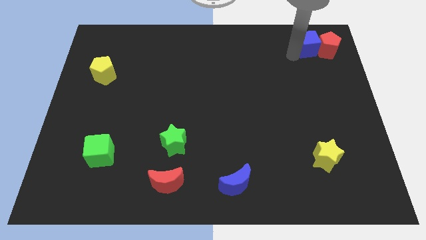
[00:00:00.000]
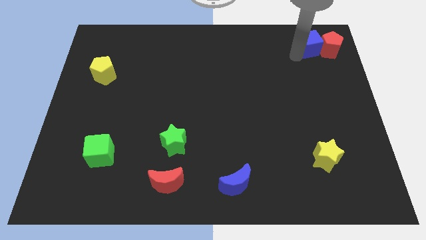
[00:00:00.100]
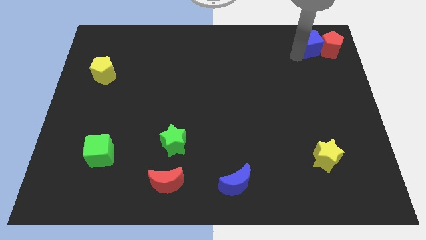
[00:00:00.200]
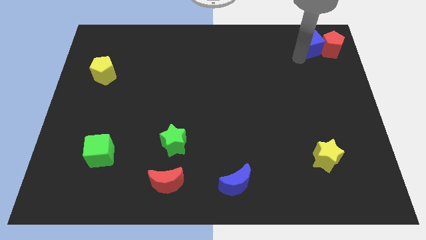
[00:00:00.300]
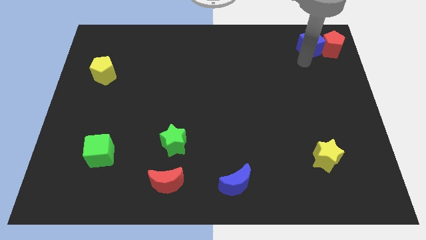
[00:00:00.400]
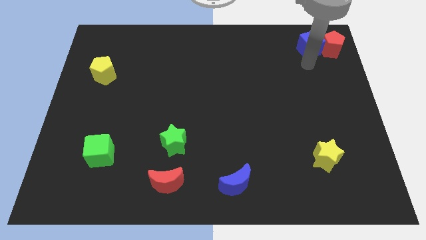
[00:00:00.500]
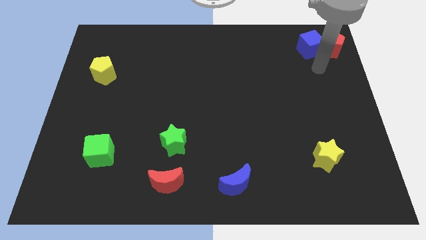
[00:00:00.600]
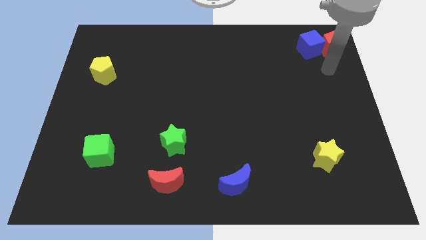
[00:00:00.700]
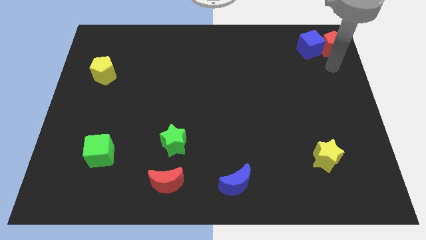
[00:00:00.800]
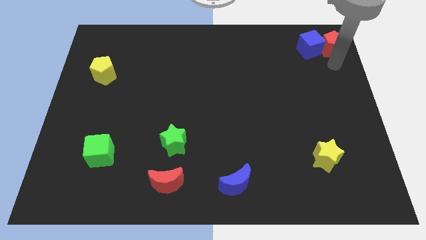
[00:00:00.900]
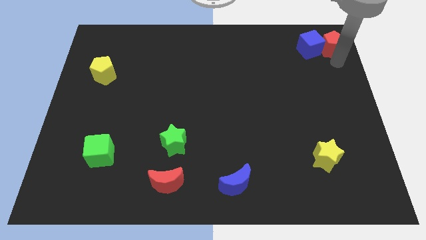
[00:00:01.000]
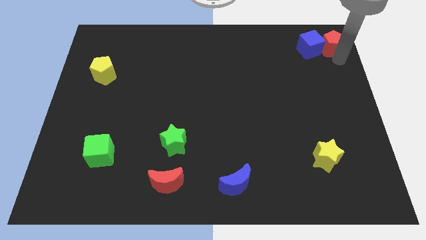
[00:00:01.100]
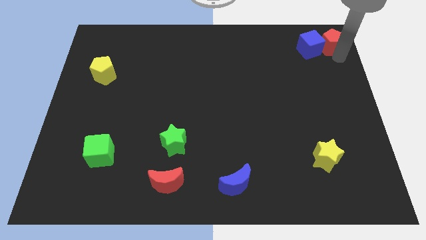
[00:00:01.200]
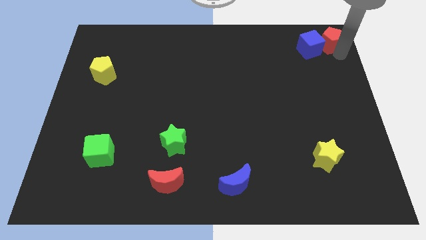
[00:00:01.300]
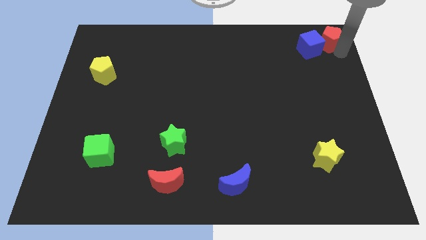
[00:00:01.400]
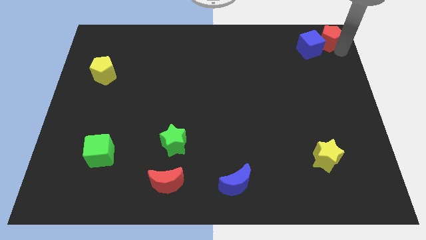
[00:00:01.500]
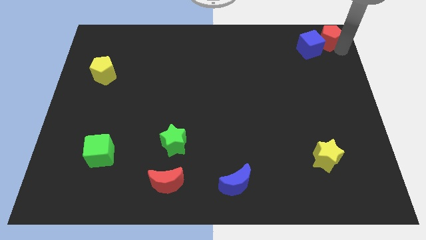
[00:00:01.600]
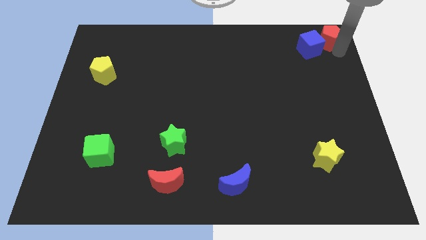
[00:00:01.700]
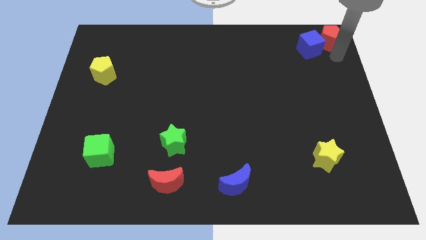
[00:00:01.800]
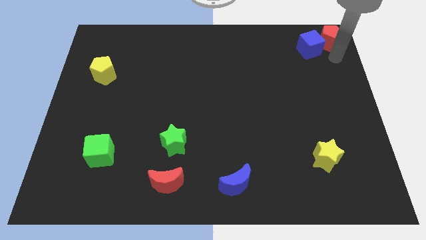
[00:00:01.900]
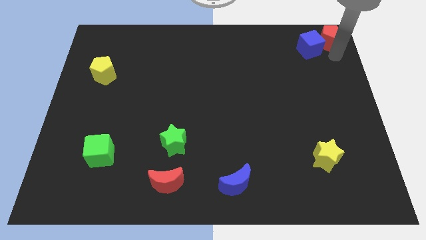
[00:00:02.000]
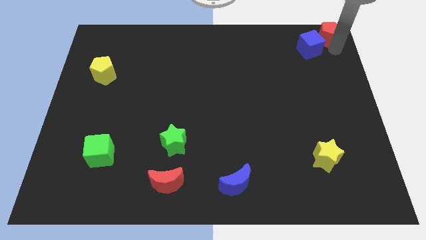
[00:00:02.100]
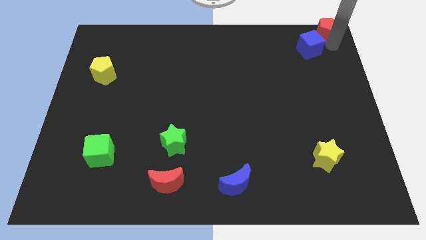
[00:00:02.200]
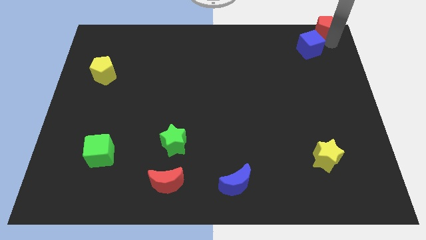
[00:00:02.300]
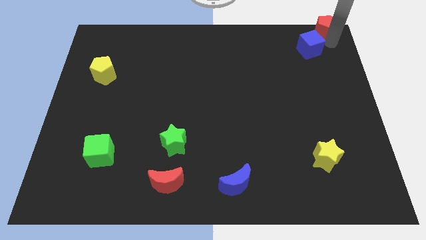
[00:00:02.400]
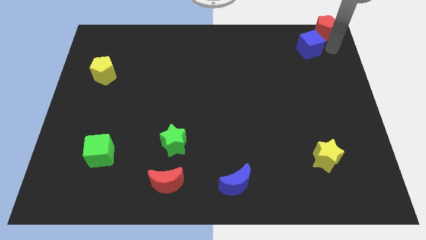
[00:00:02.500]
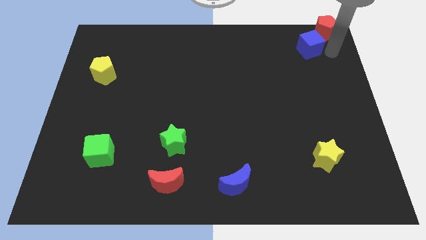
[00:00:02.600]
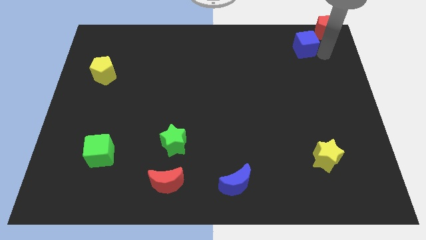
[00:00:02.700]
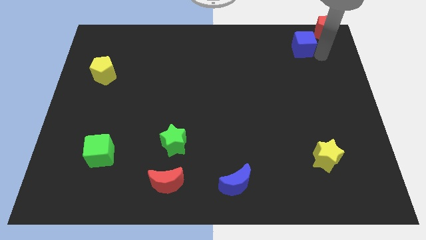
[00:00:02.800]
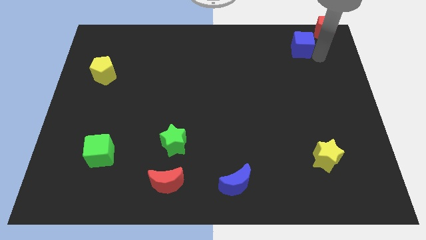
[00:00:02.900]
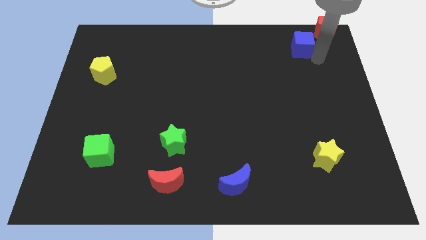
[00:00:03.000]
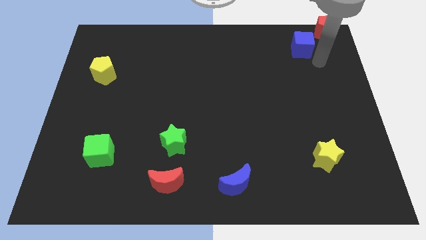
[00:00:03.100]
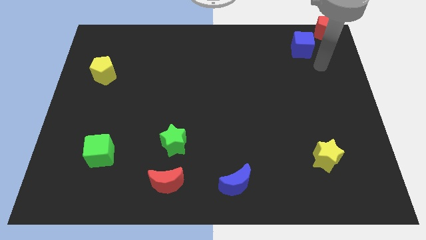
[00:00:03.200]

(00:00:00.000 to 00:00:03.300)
place the red pentagon diagonally top right to the blue cube

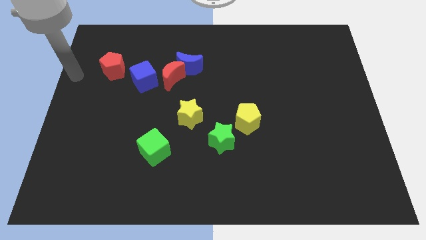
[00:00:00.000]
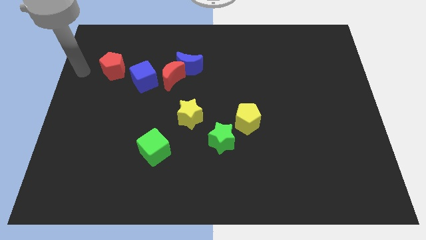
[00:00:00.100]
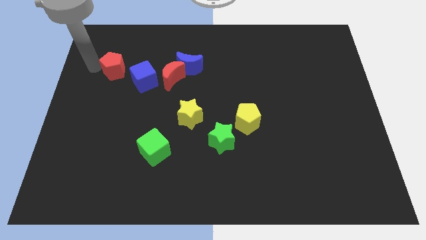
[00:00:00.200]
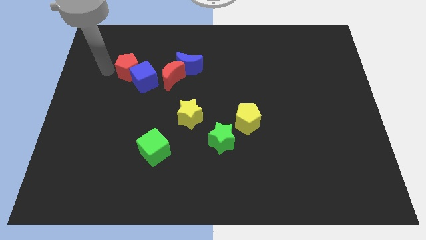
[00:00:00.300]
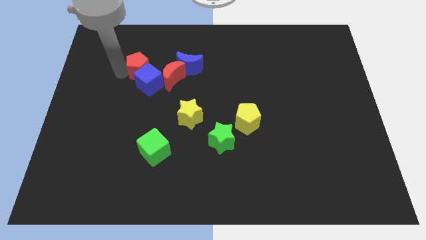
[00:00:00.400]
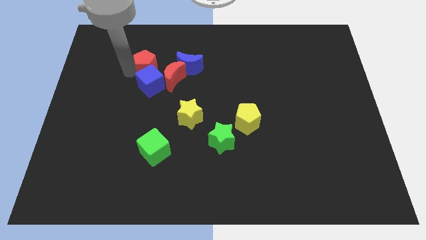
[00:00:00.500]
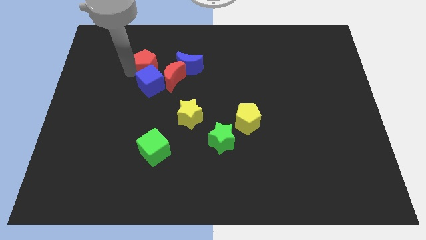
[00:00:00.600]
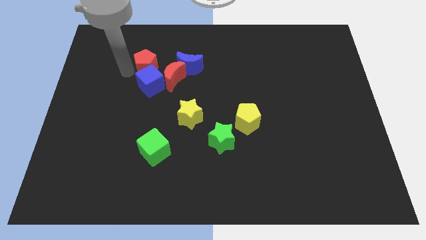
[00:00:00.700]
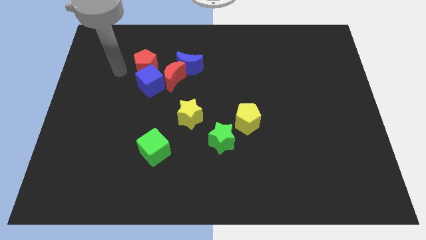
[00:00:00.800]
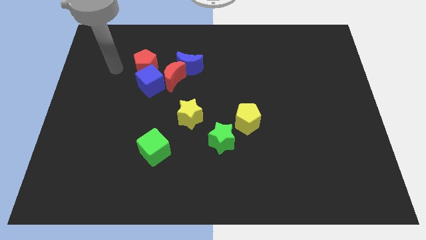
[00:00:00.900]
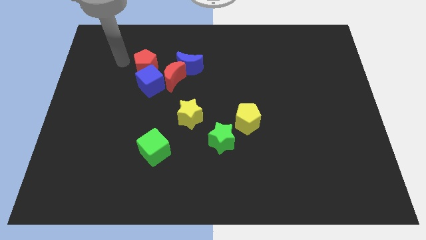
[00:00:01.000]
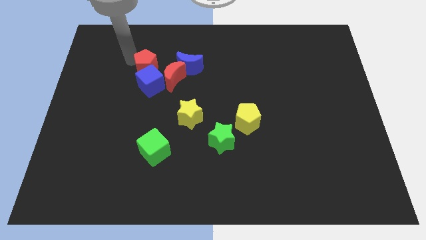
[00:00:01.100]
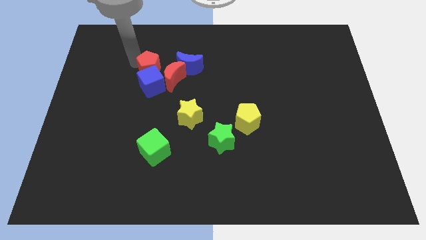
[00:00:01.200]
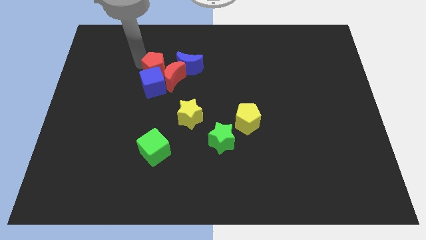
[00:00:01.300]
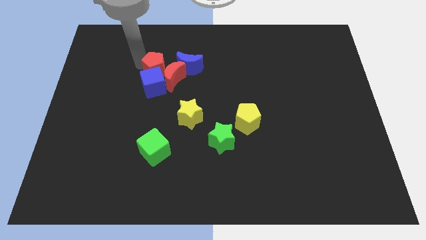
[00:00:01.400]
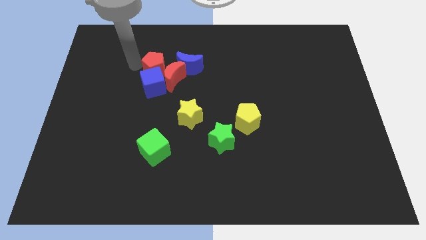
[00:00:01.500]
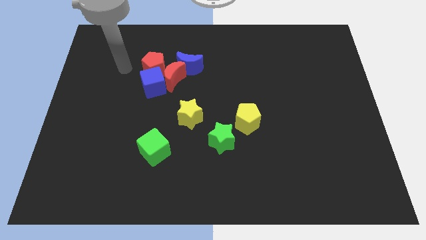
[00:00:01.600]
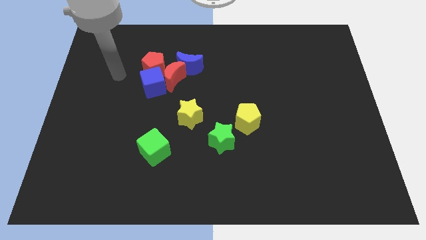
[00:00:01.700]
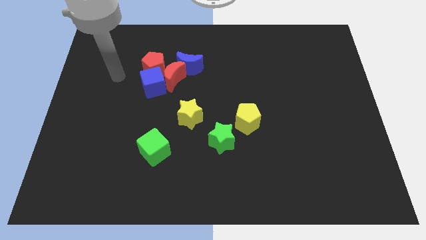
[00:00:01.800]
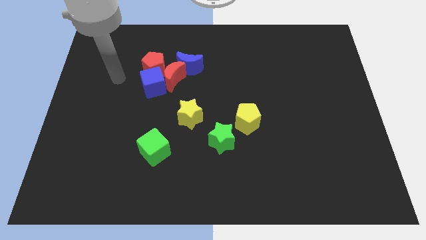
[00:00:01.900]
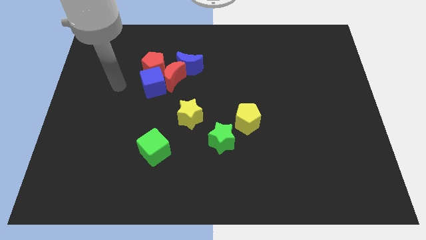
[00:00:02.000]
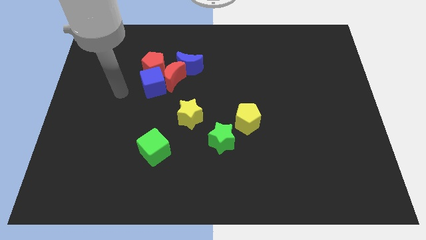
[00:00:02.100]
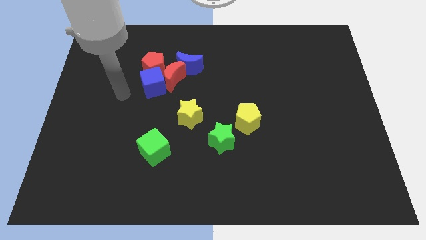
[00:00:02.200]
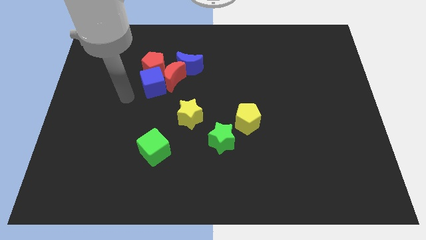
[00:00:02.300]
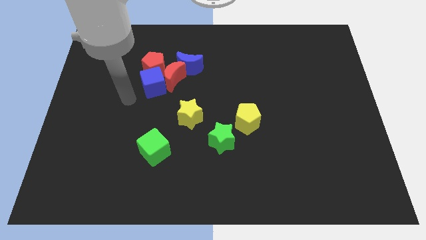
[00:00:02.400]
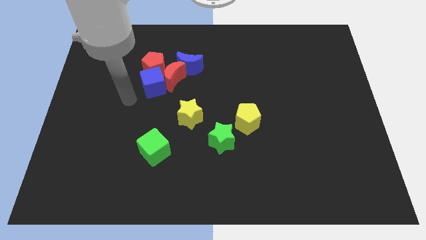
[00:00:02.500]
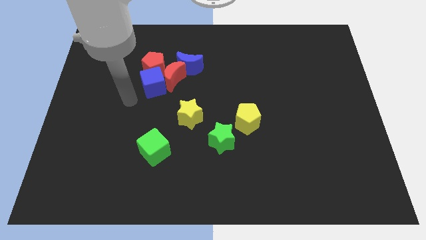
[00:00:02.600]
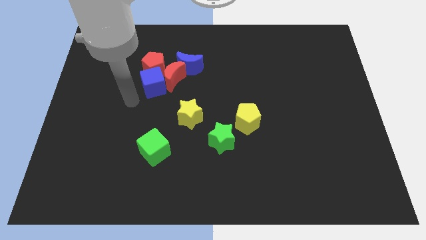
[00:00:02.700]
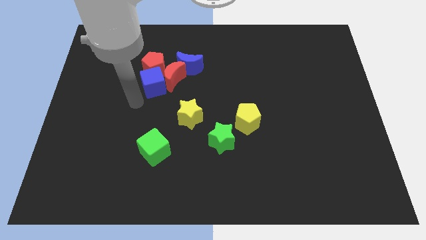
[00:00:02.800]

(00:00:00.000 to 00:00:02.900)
adjust the red pentagon close to the red crescent and blue cube

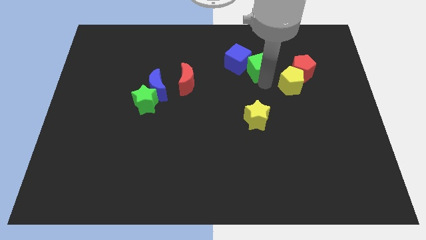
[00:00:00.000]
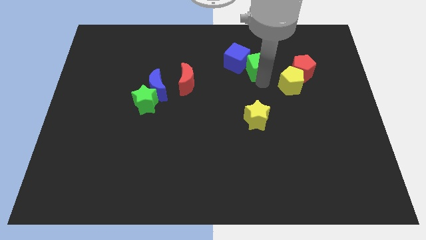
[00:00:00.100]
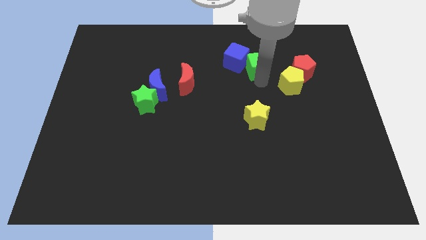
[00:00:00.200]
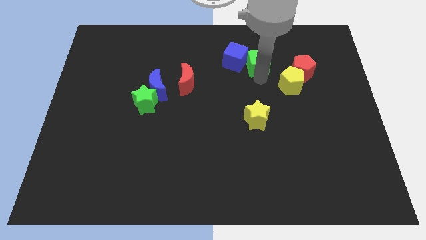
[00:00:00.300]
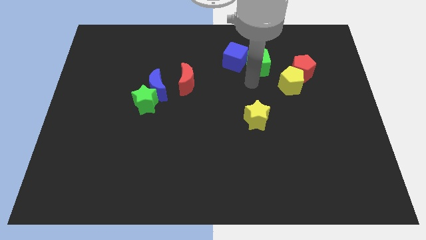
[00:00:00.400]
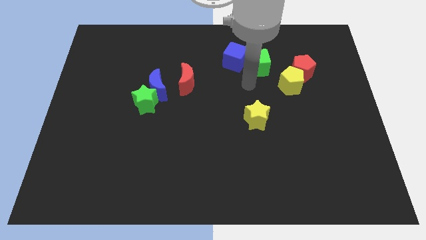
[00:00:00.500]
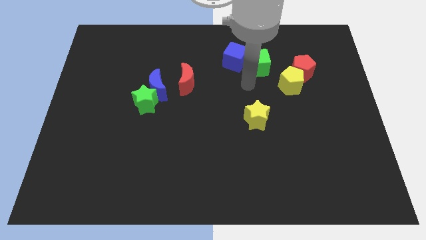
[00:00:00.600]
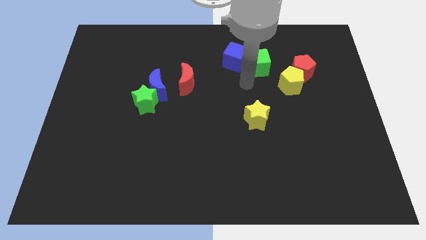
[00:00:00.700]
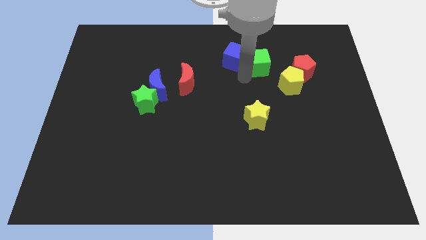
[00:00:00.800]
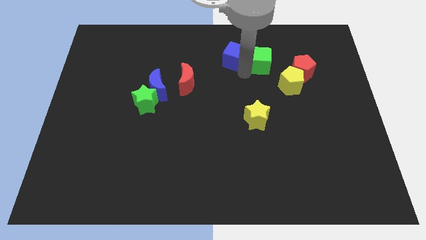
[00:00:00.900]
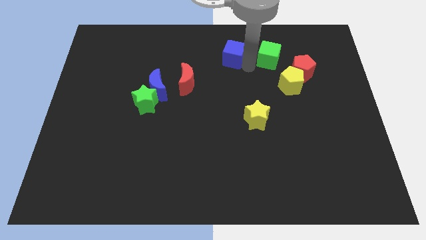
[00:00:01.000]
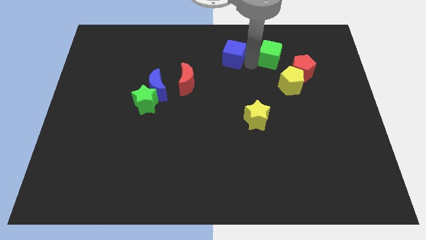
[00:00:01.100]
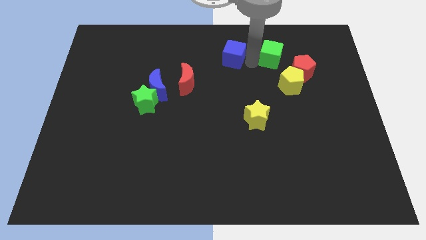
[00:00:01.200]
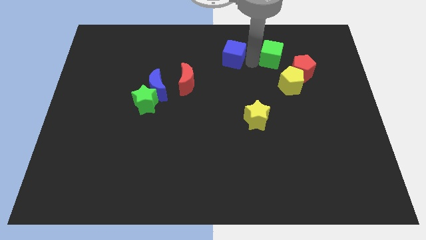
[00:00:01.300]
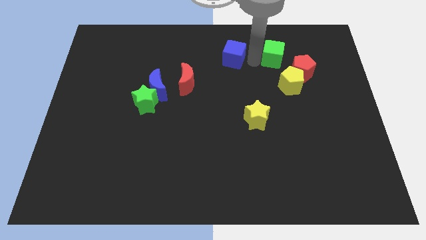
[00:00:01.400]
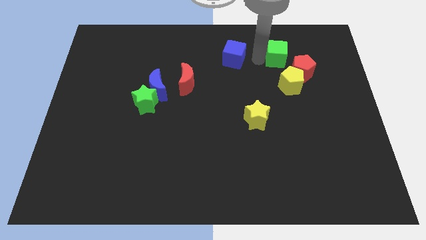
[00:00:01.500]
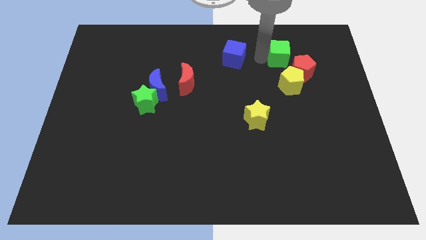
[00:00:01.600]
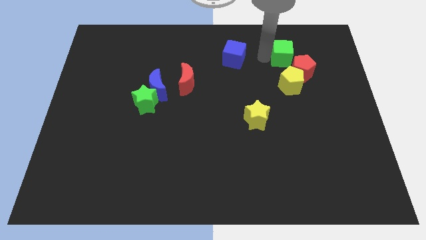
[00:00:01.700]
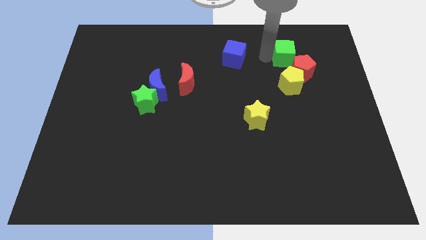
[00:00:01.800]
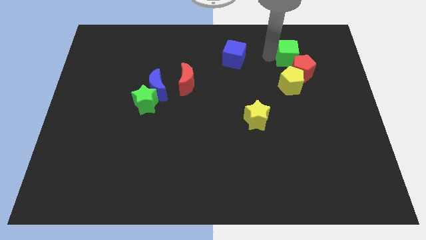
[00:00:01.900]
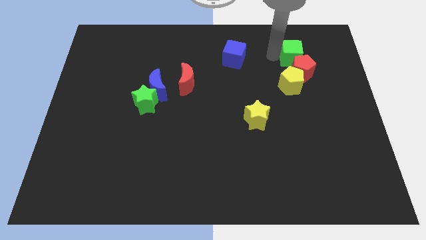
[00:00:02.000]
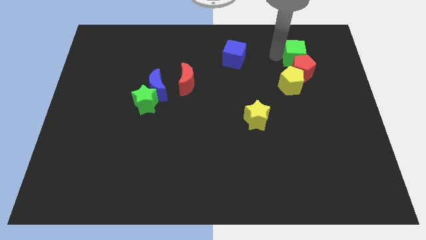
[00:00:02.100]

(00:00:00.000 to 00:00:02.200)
move the green cube slightly right

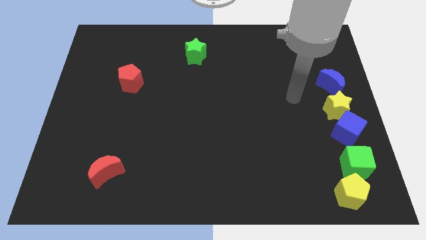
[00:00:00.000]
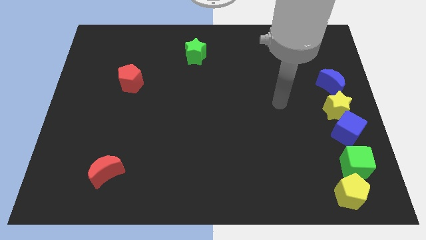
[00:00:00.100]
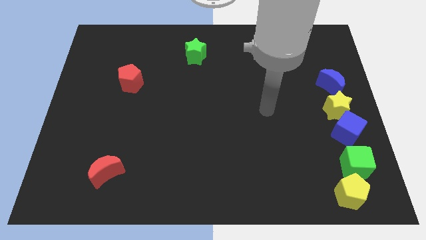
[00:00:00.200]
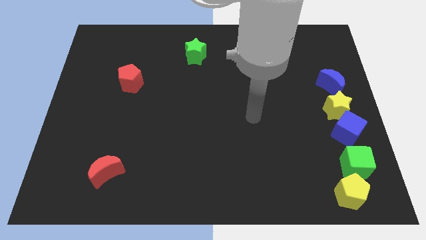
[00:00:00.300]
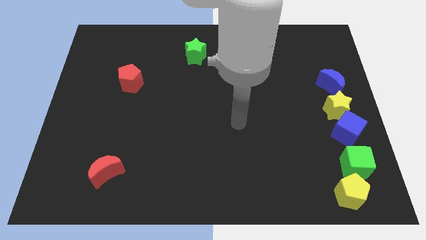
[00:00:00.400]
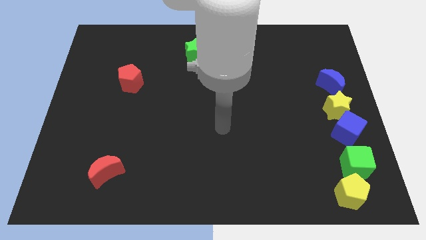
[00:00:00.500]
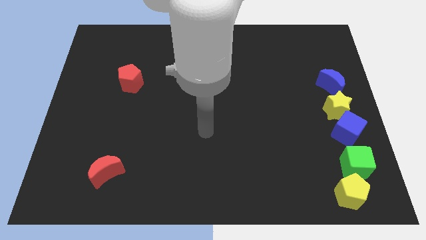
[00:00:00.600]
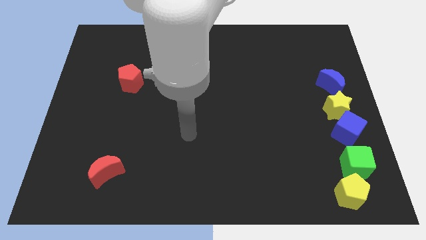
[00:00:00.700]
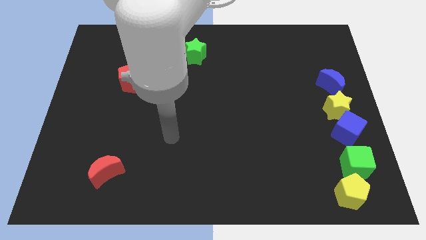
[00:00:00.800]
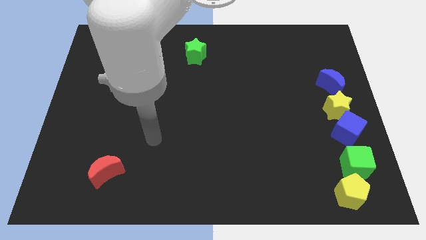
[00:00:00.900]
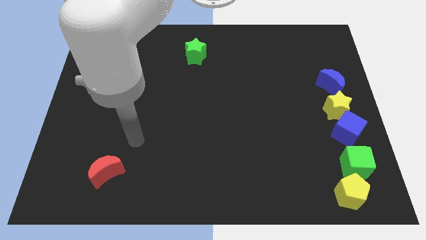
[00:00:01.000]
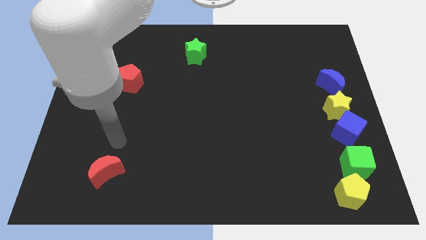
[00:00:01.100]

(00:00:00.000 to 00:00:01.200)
move arm towards the red crescent on the board
